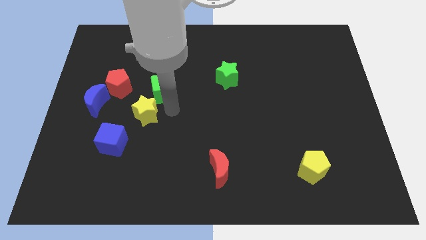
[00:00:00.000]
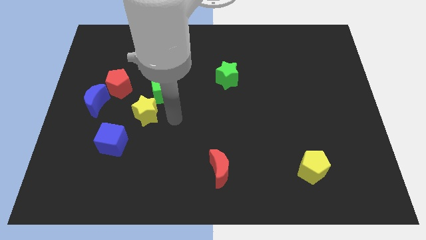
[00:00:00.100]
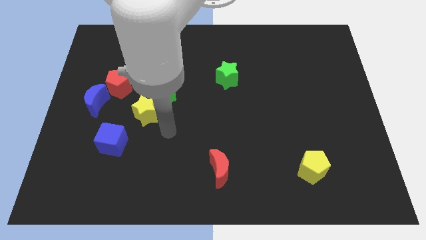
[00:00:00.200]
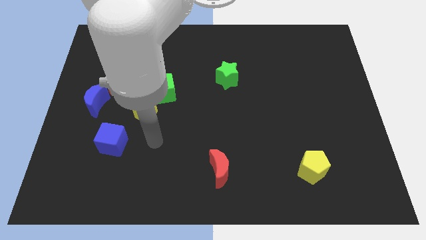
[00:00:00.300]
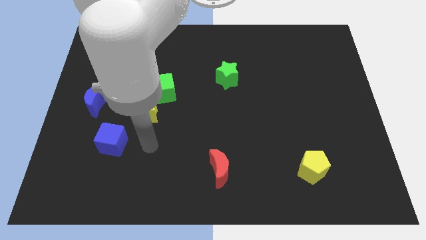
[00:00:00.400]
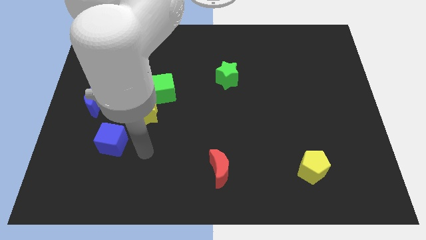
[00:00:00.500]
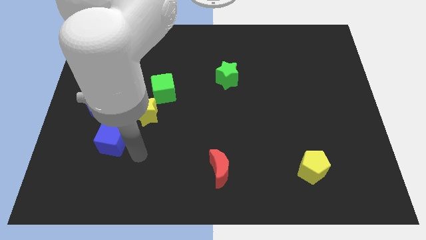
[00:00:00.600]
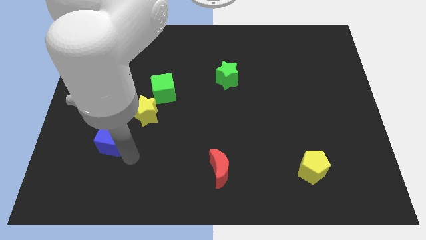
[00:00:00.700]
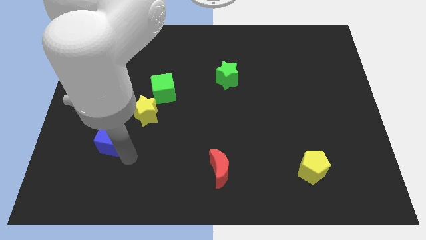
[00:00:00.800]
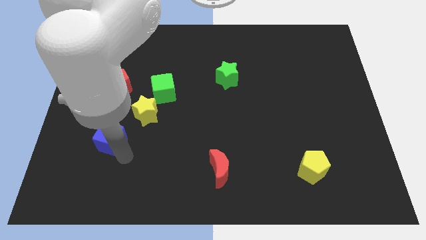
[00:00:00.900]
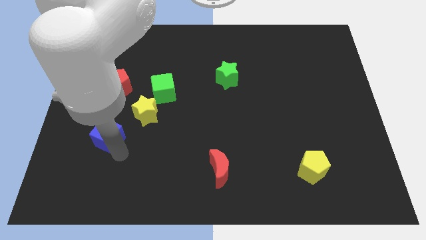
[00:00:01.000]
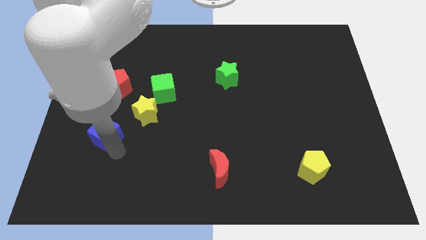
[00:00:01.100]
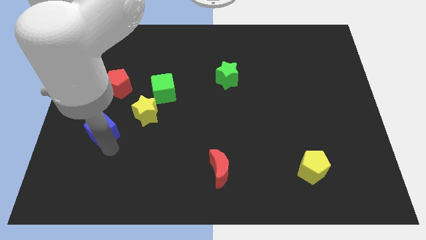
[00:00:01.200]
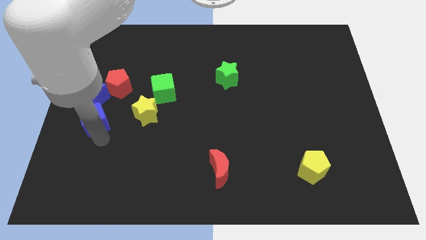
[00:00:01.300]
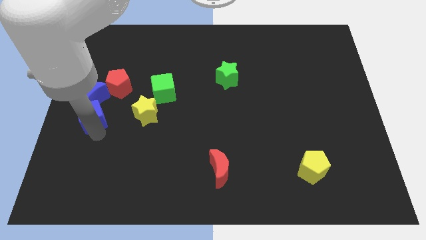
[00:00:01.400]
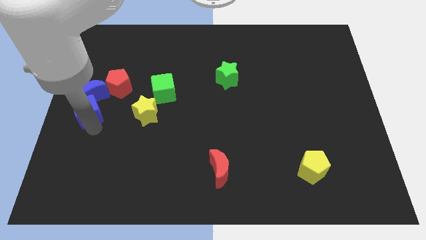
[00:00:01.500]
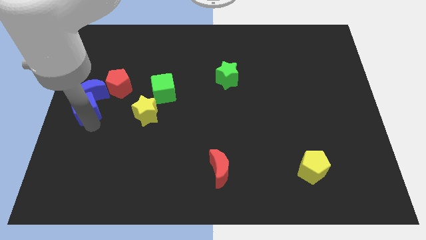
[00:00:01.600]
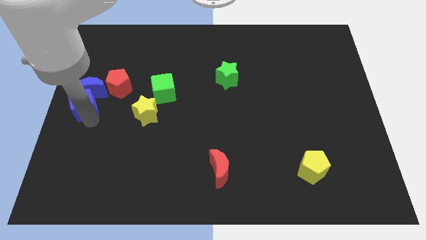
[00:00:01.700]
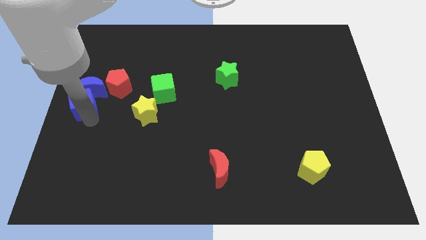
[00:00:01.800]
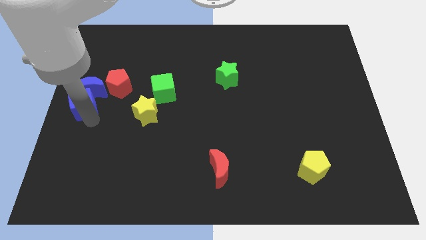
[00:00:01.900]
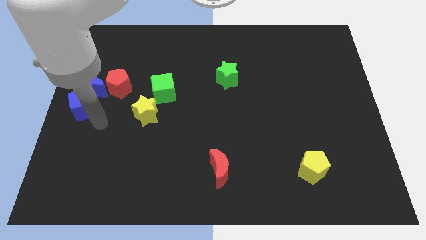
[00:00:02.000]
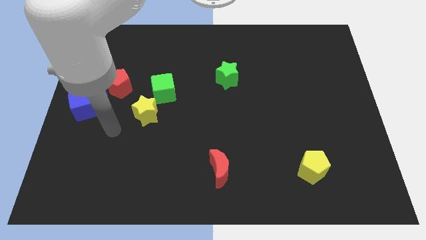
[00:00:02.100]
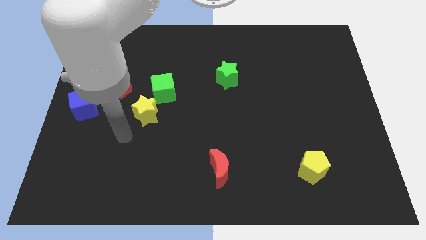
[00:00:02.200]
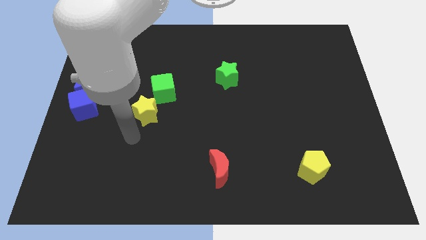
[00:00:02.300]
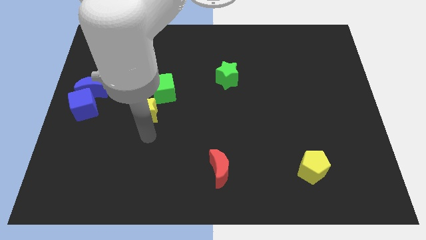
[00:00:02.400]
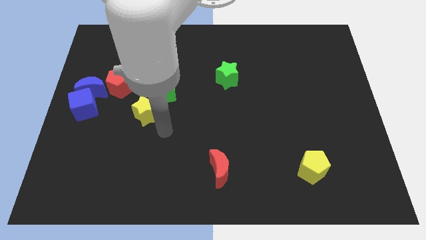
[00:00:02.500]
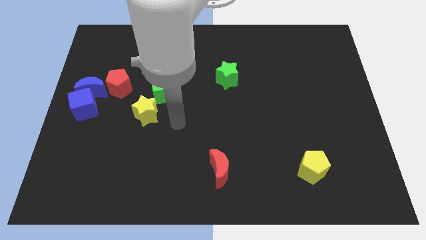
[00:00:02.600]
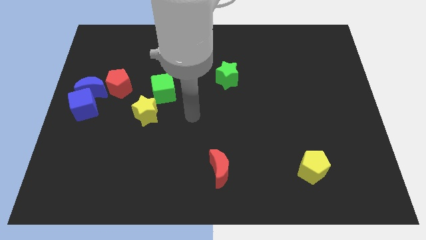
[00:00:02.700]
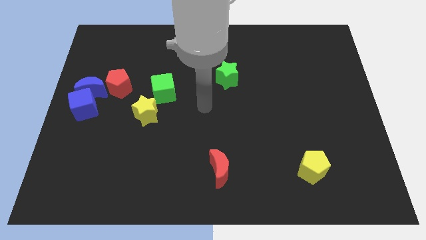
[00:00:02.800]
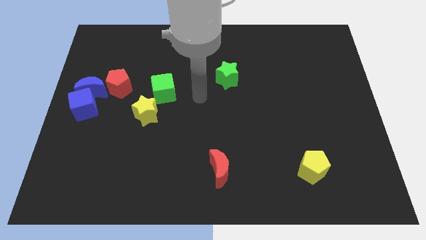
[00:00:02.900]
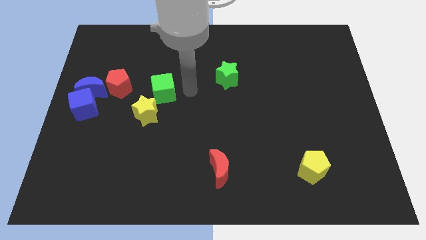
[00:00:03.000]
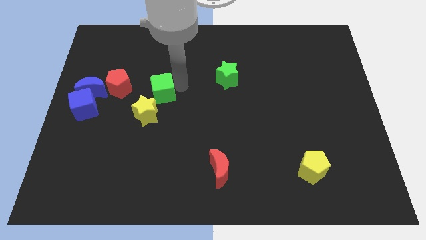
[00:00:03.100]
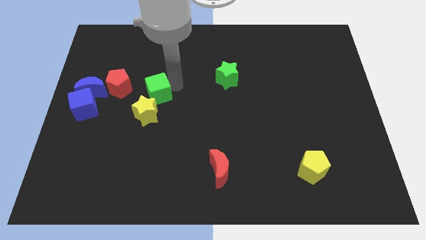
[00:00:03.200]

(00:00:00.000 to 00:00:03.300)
move the blue cube below the blue crescent

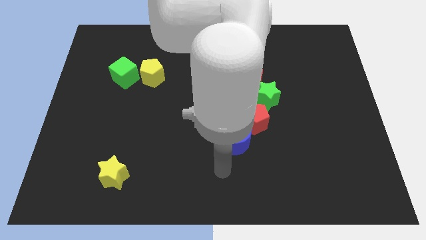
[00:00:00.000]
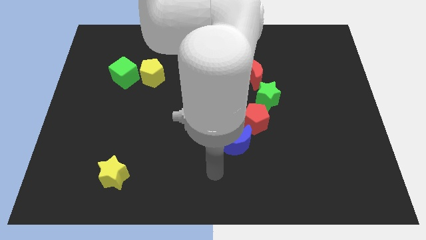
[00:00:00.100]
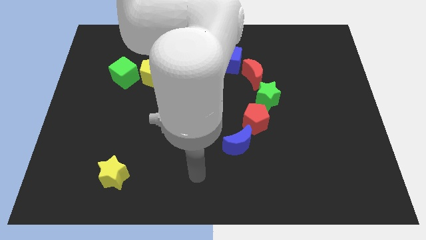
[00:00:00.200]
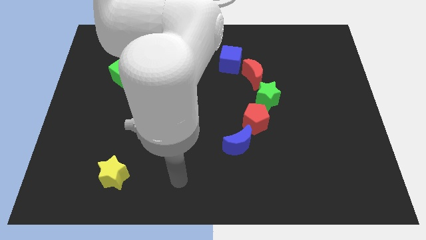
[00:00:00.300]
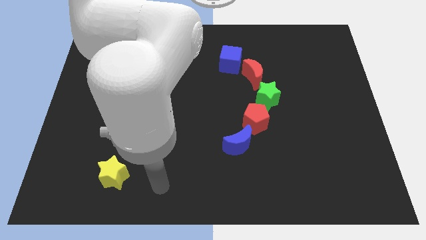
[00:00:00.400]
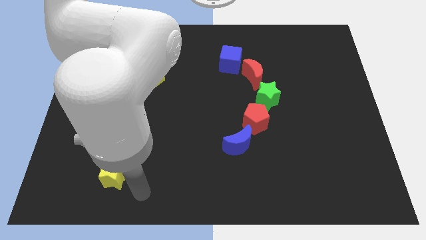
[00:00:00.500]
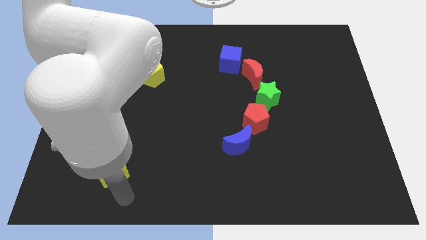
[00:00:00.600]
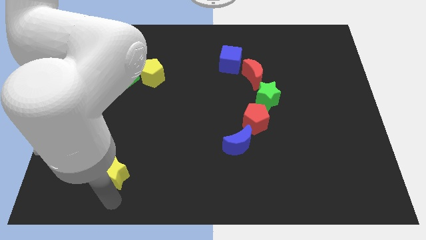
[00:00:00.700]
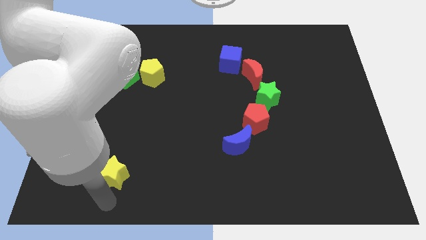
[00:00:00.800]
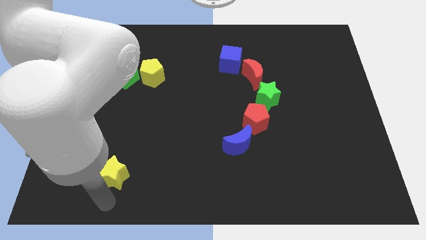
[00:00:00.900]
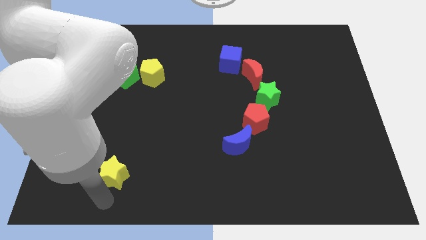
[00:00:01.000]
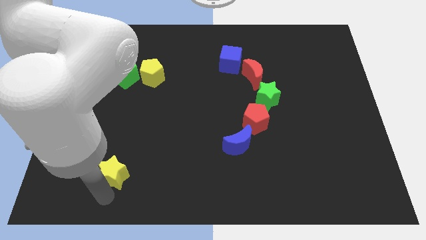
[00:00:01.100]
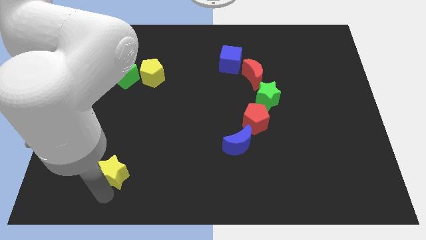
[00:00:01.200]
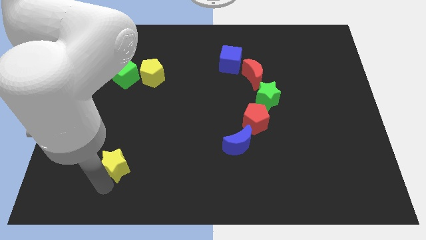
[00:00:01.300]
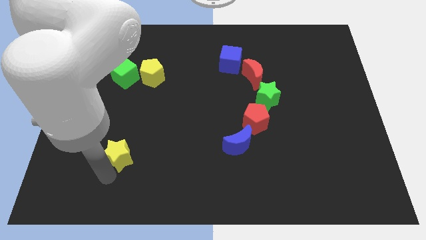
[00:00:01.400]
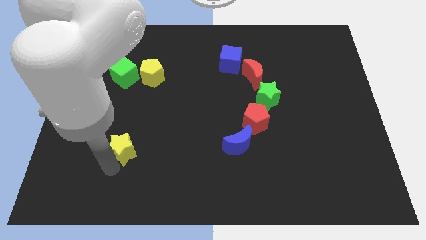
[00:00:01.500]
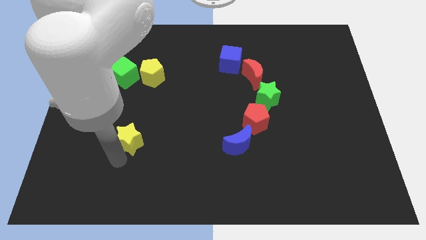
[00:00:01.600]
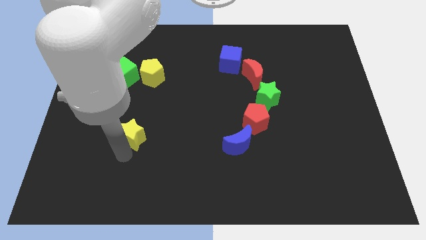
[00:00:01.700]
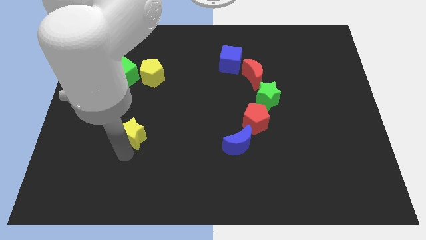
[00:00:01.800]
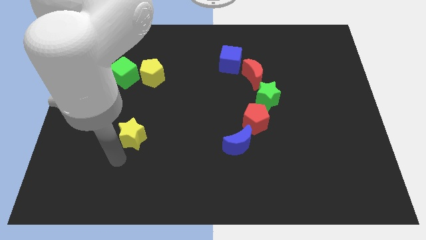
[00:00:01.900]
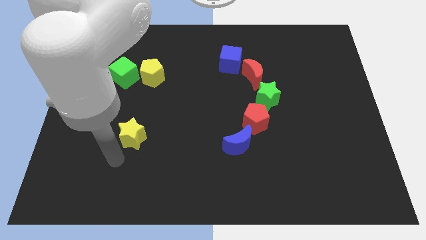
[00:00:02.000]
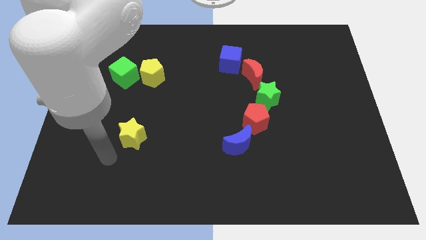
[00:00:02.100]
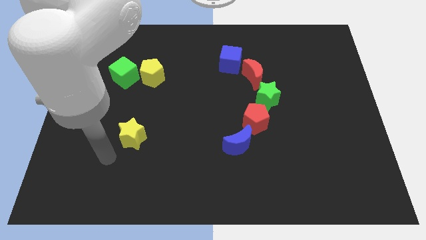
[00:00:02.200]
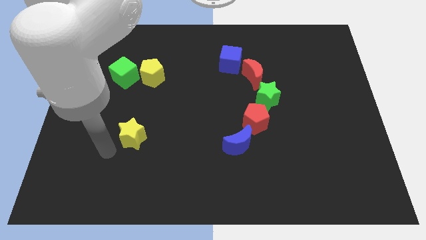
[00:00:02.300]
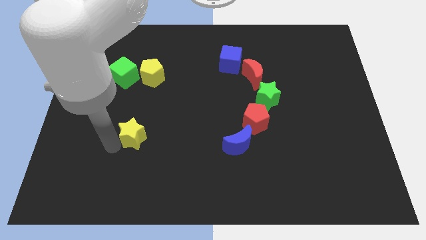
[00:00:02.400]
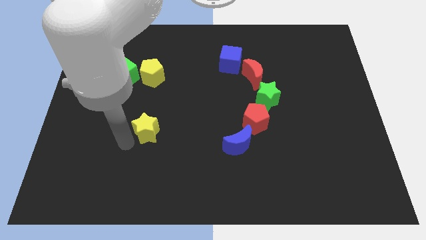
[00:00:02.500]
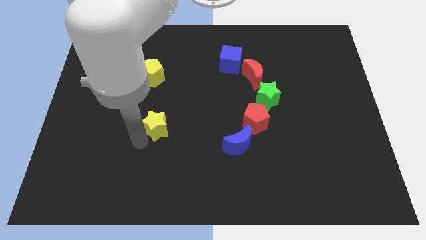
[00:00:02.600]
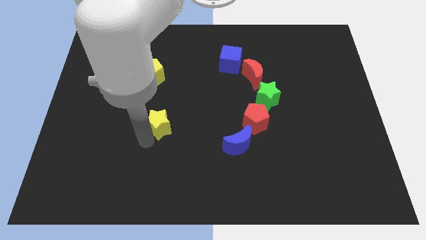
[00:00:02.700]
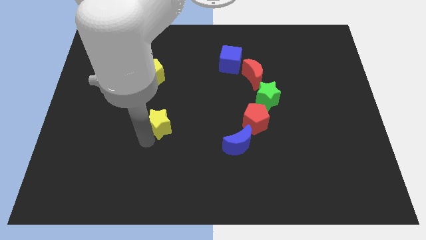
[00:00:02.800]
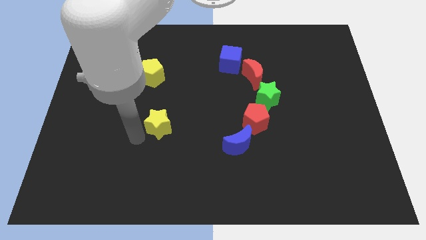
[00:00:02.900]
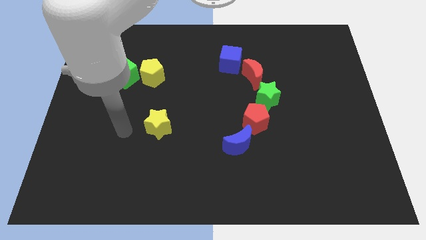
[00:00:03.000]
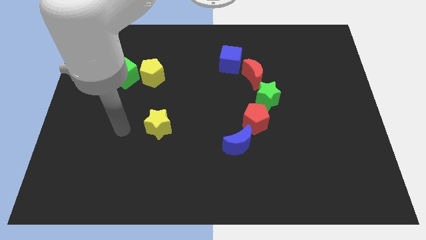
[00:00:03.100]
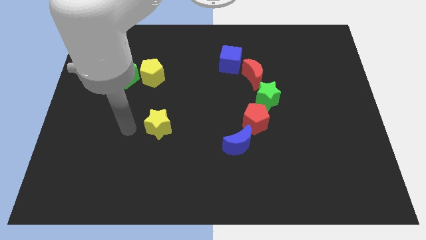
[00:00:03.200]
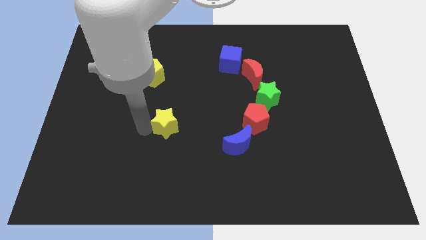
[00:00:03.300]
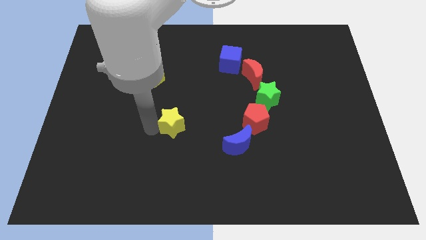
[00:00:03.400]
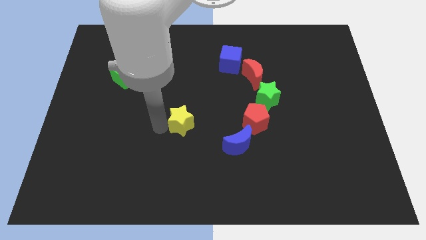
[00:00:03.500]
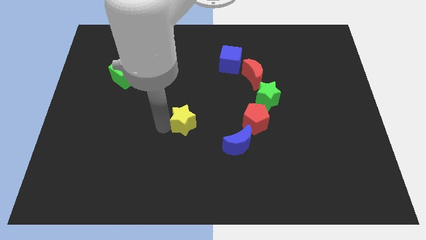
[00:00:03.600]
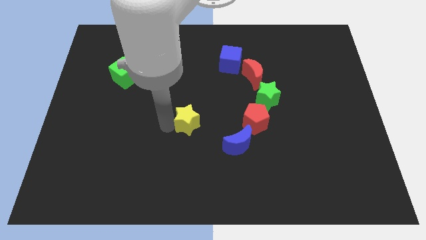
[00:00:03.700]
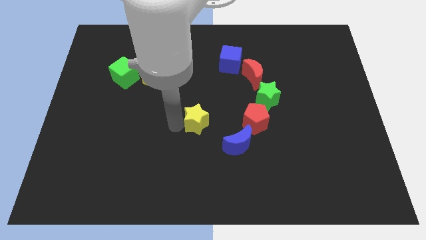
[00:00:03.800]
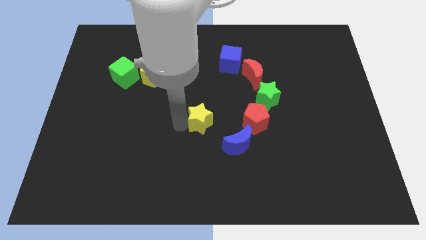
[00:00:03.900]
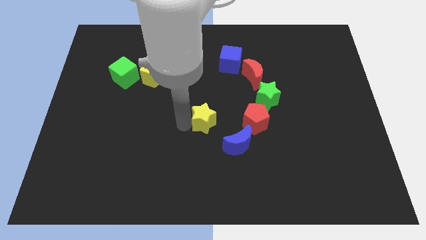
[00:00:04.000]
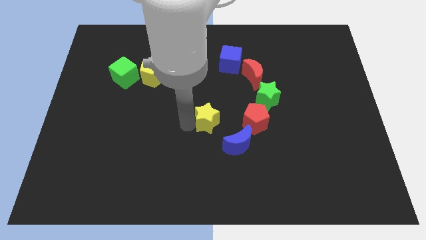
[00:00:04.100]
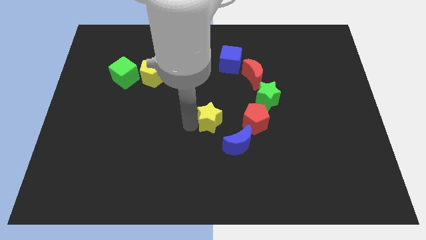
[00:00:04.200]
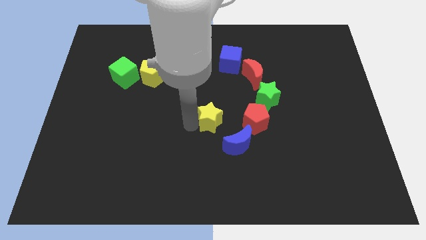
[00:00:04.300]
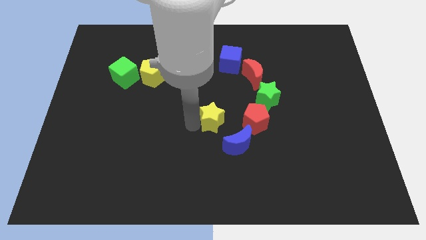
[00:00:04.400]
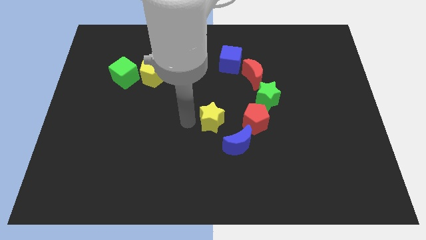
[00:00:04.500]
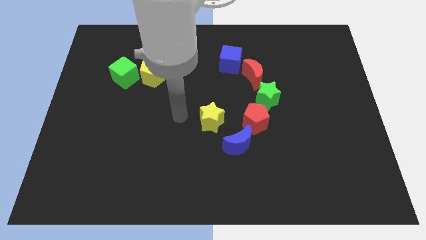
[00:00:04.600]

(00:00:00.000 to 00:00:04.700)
move the yellow star to the center of board

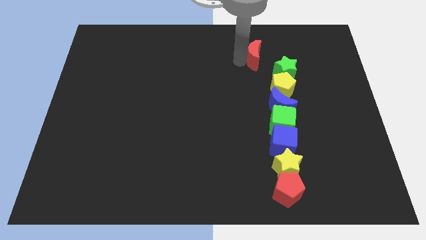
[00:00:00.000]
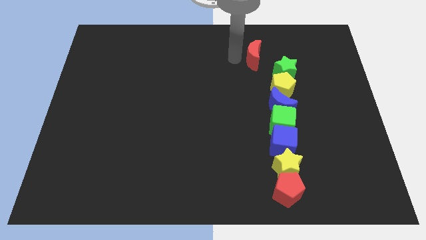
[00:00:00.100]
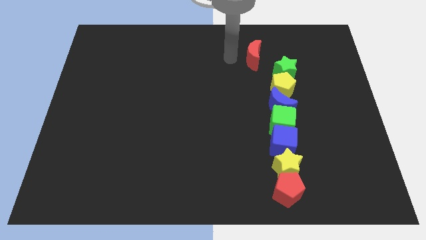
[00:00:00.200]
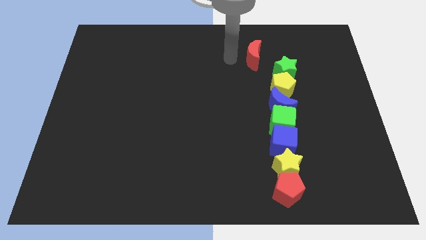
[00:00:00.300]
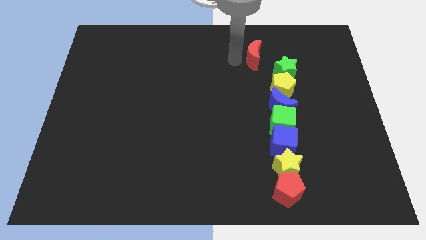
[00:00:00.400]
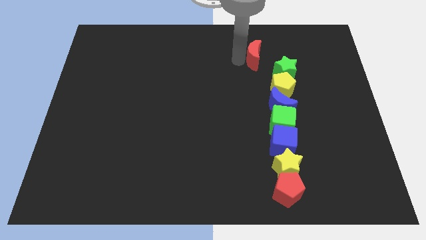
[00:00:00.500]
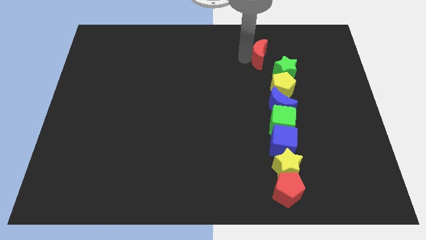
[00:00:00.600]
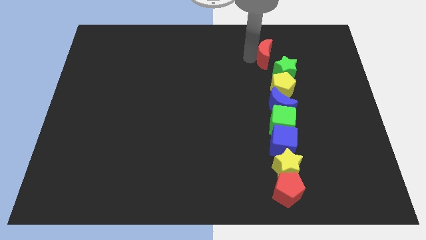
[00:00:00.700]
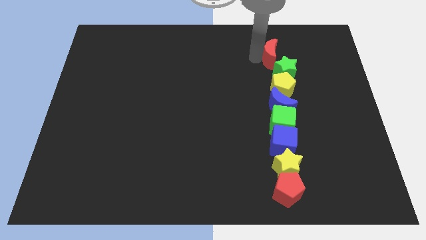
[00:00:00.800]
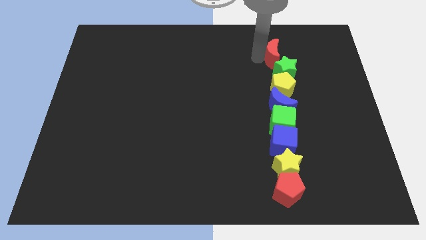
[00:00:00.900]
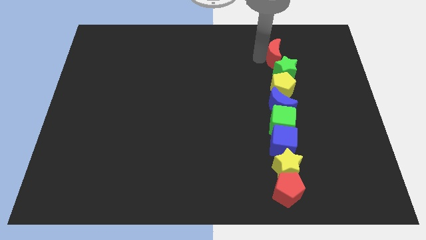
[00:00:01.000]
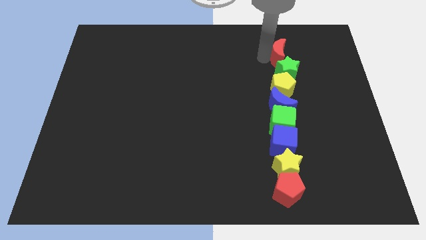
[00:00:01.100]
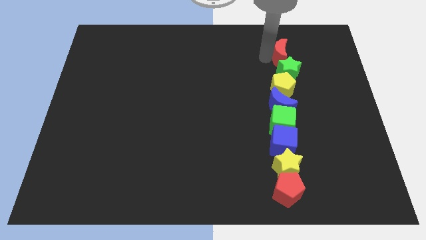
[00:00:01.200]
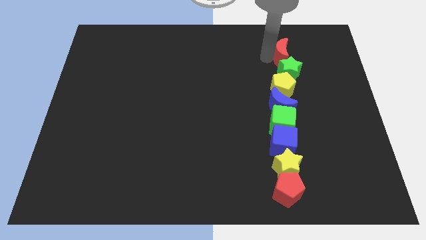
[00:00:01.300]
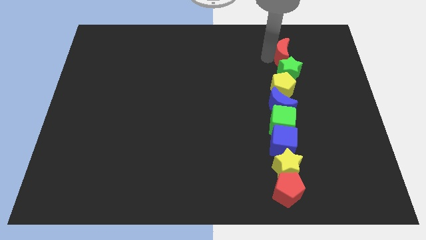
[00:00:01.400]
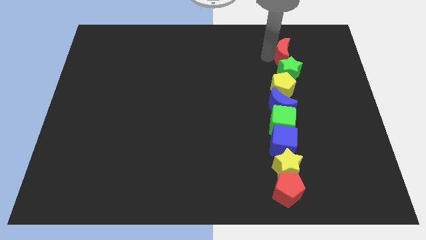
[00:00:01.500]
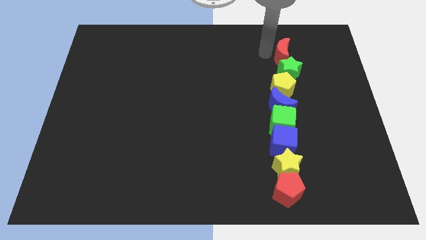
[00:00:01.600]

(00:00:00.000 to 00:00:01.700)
push red moon in green star
